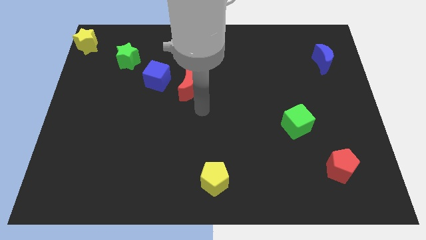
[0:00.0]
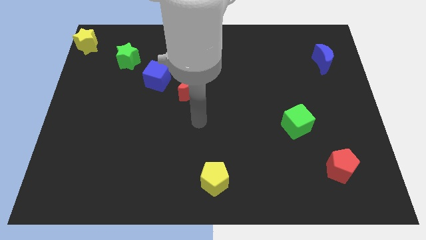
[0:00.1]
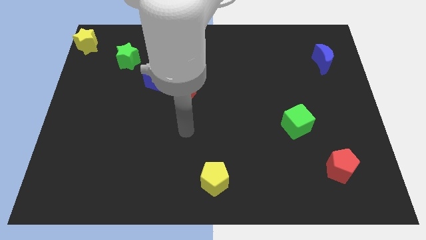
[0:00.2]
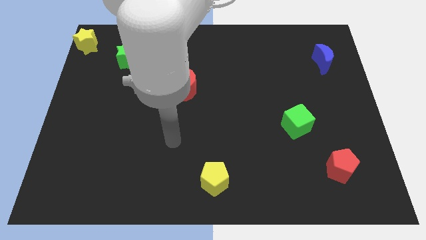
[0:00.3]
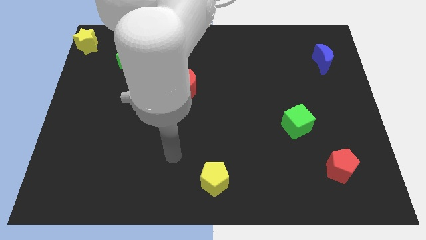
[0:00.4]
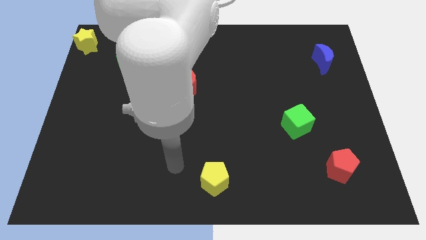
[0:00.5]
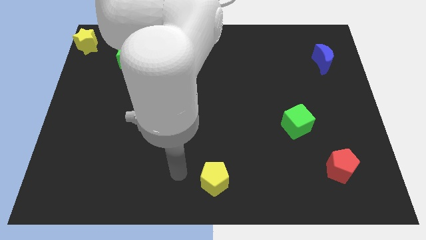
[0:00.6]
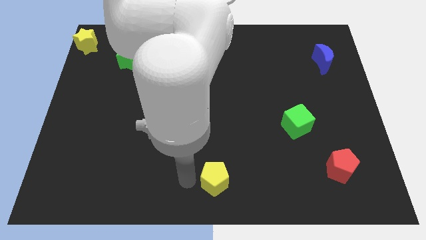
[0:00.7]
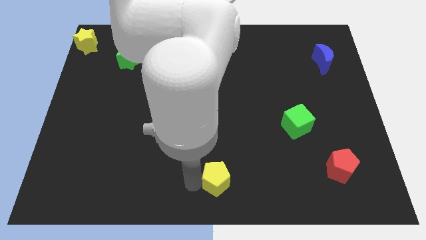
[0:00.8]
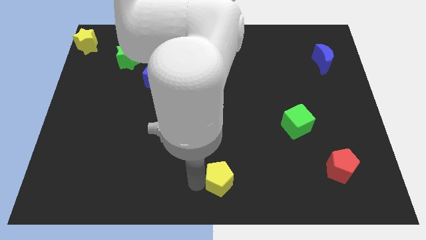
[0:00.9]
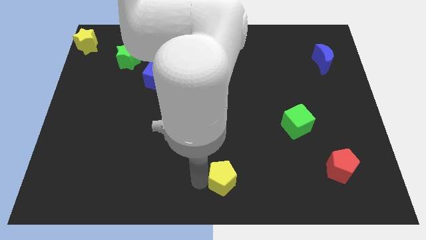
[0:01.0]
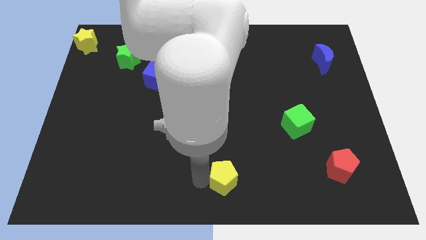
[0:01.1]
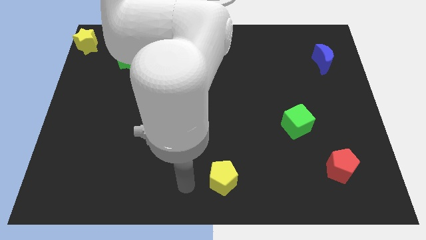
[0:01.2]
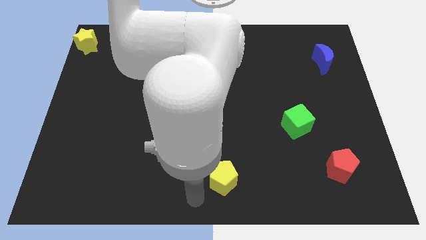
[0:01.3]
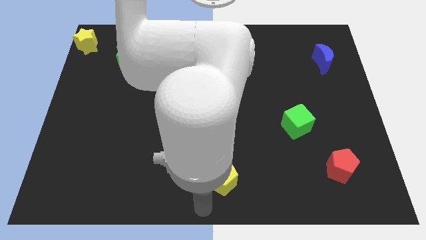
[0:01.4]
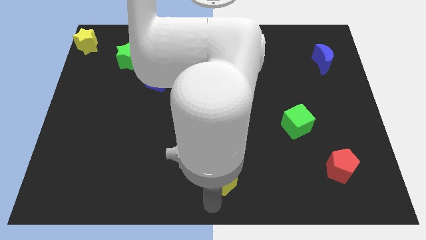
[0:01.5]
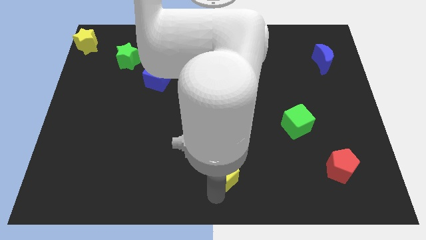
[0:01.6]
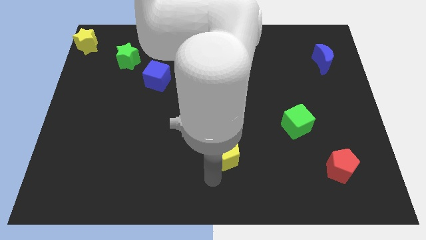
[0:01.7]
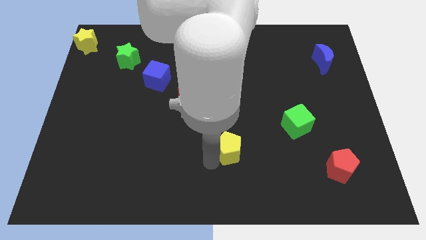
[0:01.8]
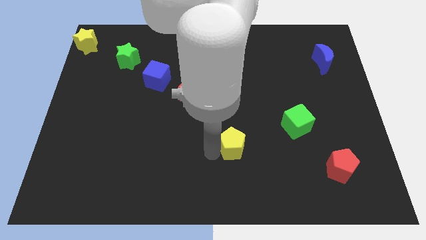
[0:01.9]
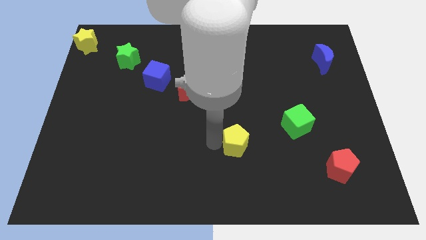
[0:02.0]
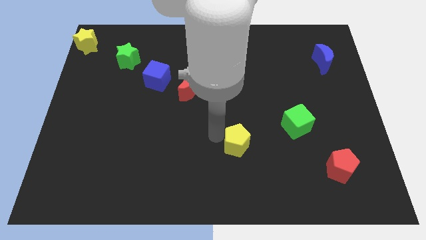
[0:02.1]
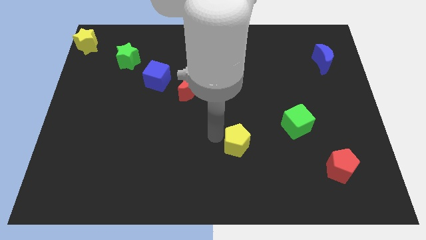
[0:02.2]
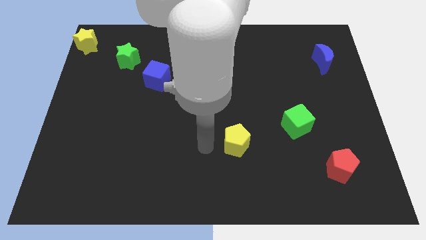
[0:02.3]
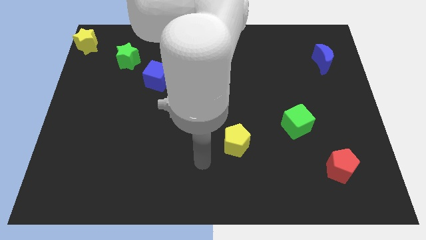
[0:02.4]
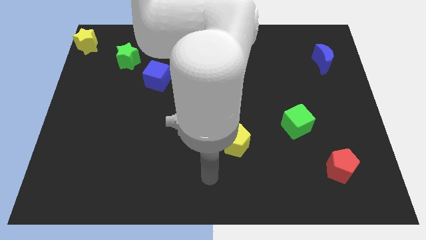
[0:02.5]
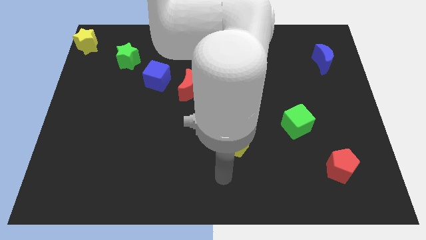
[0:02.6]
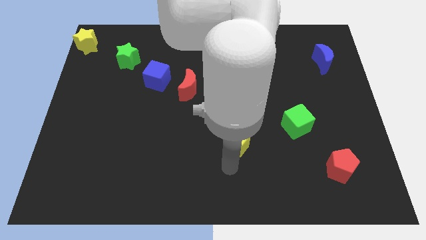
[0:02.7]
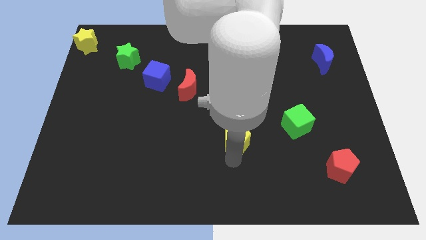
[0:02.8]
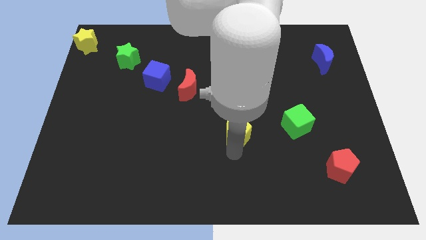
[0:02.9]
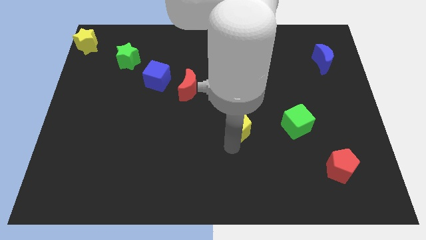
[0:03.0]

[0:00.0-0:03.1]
push yellow pentagon slightly towards up

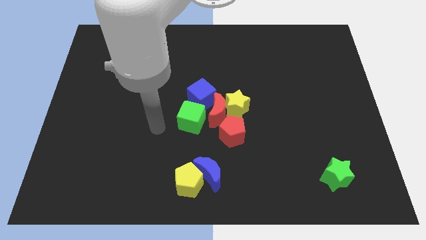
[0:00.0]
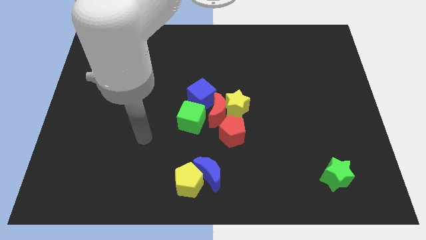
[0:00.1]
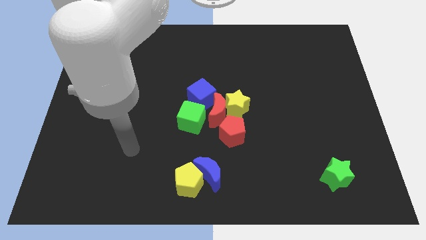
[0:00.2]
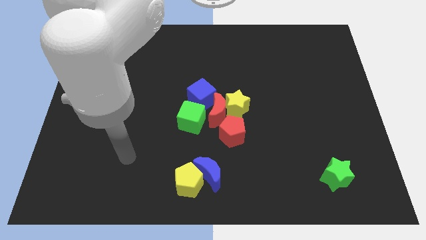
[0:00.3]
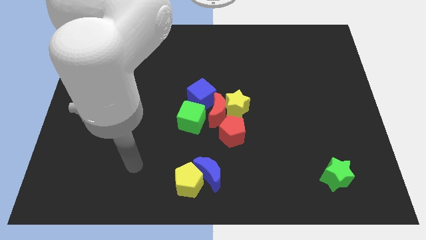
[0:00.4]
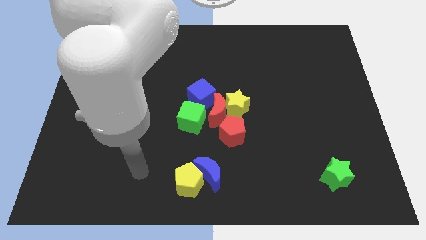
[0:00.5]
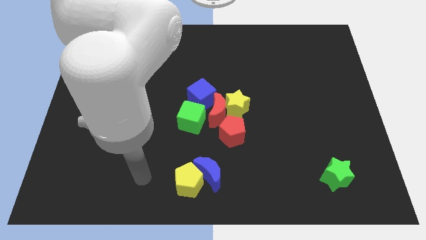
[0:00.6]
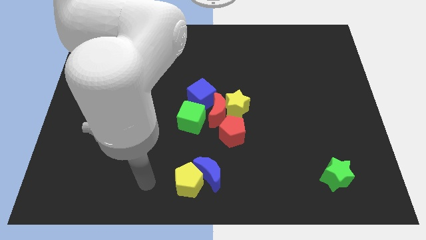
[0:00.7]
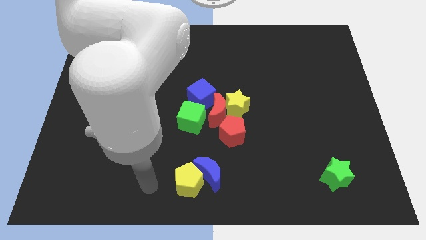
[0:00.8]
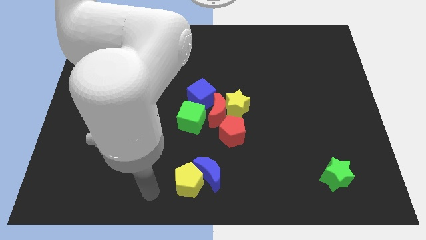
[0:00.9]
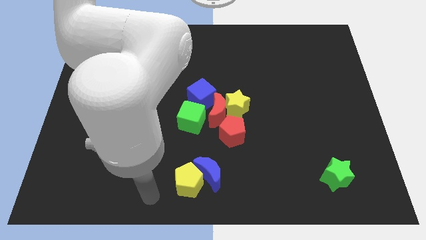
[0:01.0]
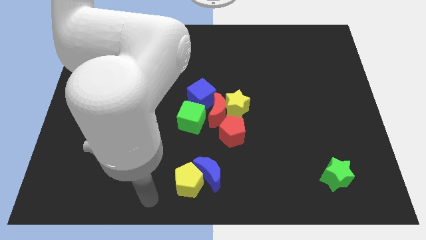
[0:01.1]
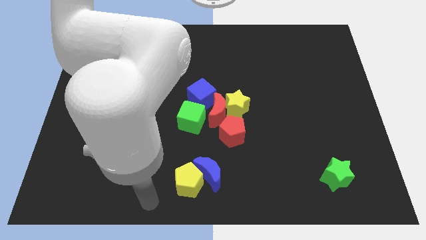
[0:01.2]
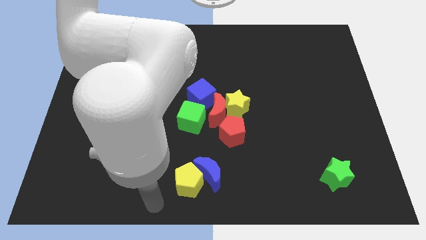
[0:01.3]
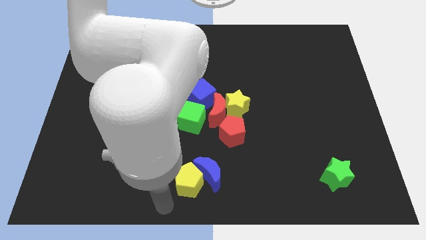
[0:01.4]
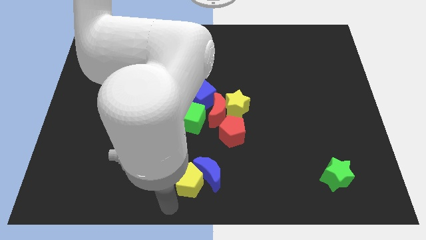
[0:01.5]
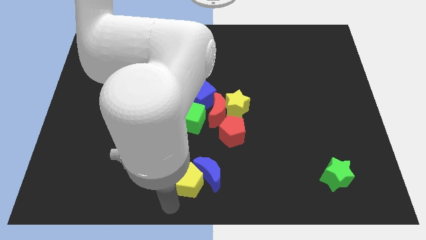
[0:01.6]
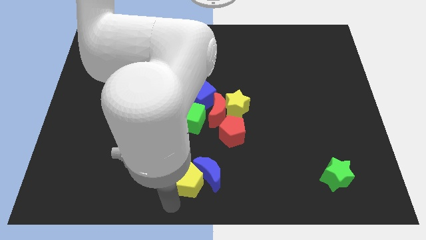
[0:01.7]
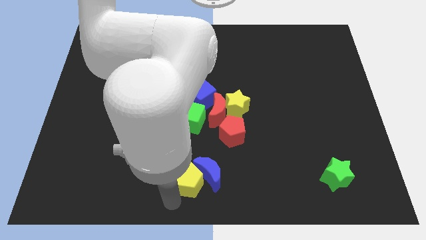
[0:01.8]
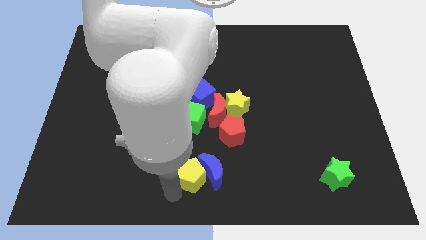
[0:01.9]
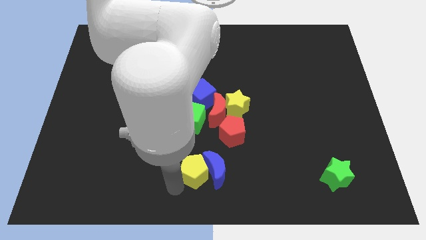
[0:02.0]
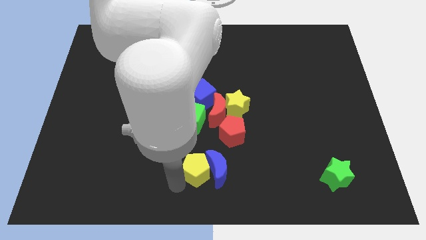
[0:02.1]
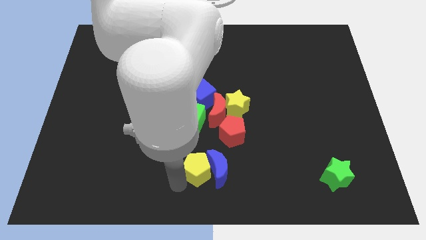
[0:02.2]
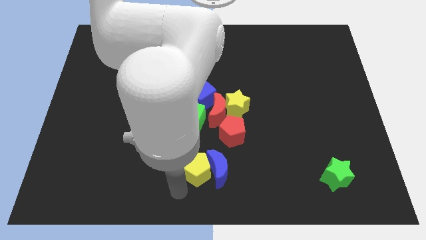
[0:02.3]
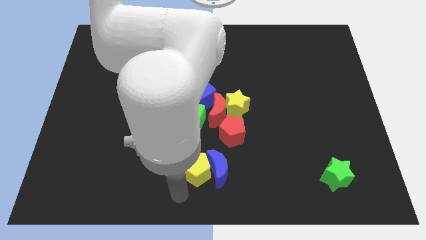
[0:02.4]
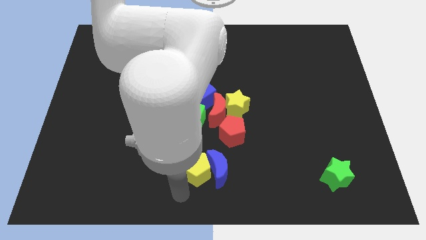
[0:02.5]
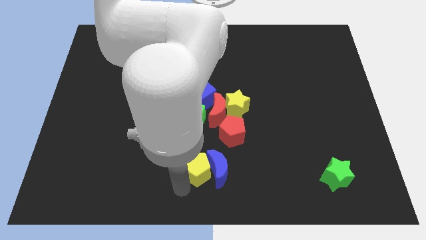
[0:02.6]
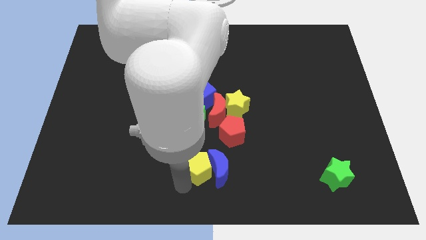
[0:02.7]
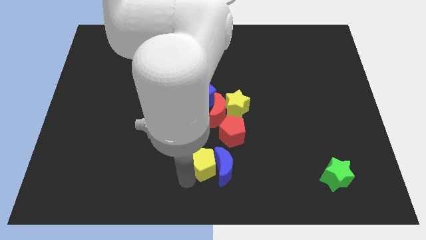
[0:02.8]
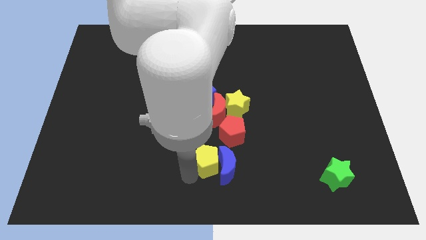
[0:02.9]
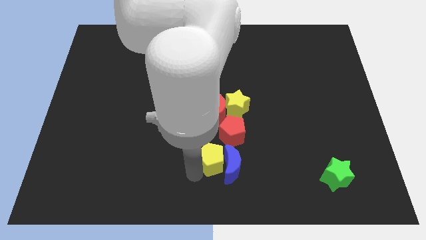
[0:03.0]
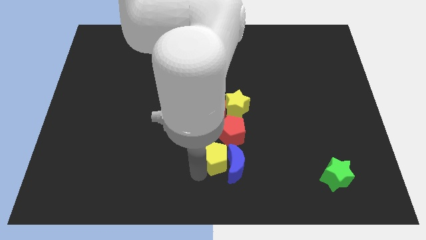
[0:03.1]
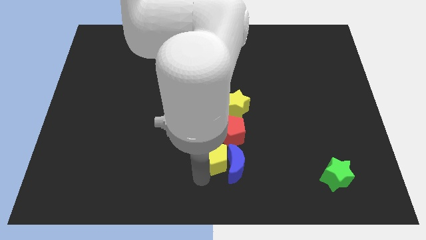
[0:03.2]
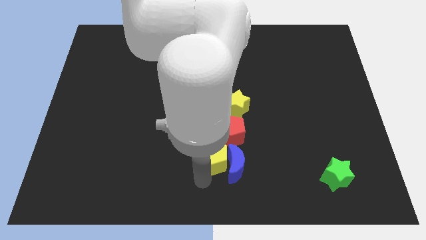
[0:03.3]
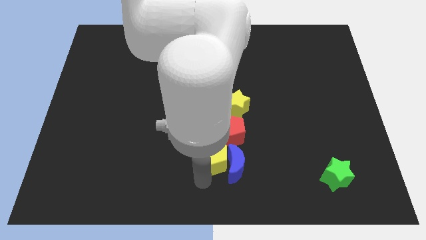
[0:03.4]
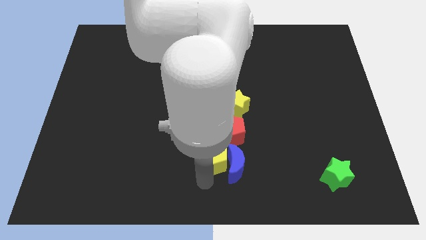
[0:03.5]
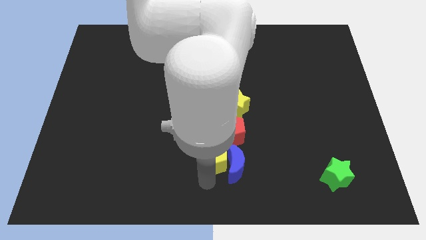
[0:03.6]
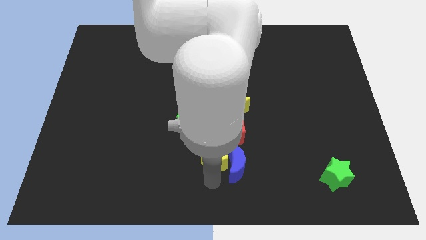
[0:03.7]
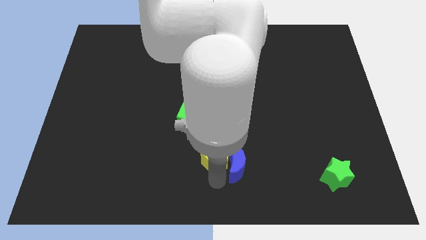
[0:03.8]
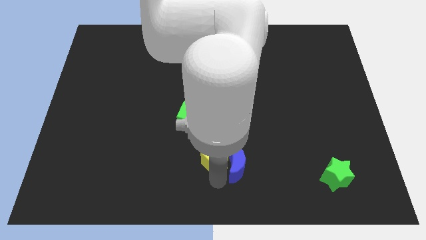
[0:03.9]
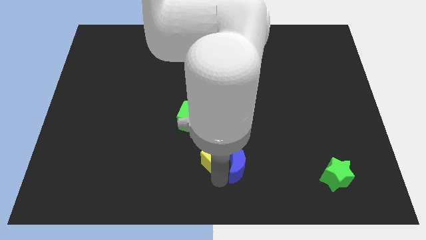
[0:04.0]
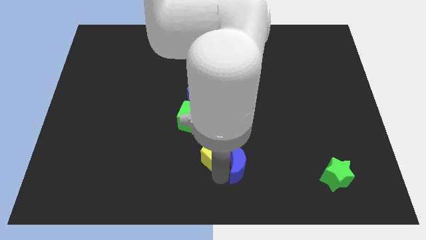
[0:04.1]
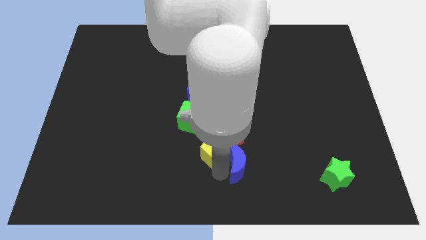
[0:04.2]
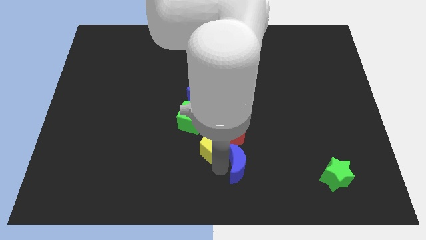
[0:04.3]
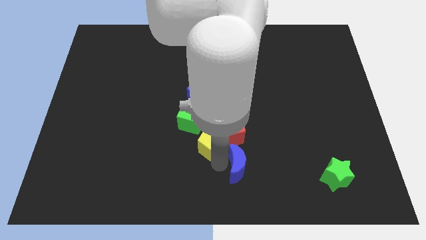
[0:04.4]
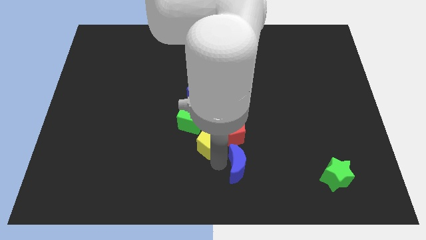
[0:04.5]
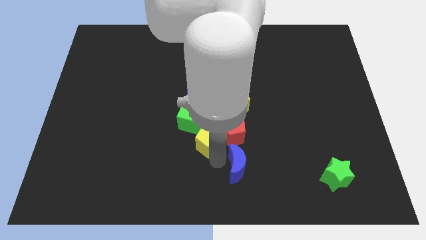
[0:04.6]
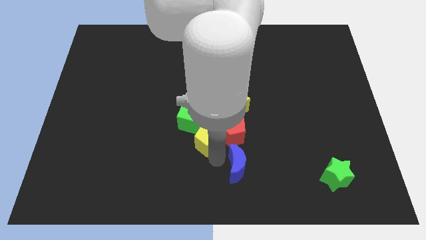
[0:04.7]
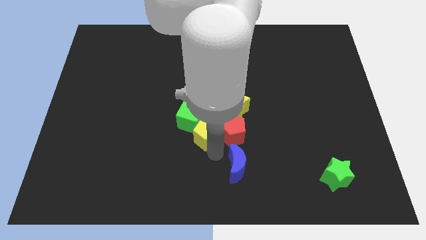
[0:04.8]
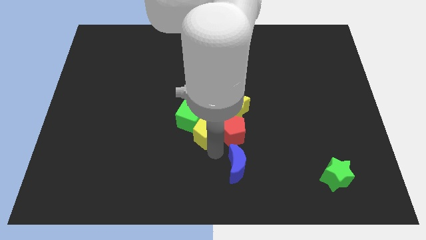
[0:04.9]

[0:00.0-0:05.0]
push the yellow pentagon to the bottom of the red crescent

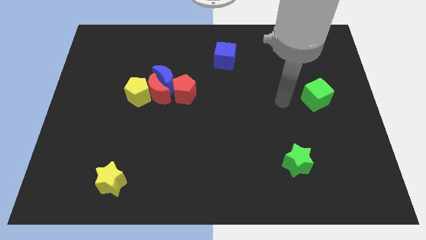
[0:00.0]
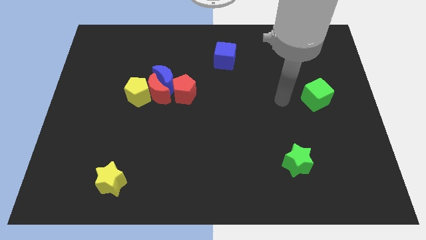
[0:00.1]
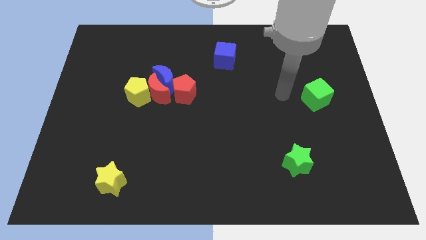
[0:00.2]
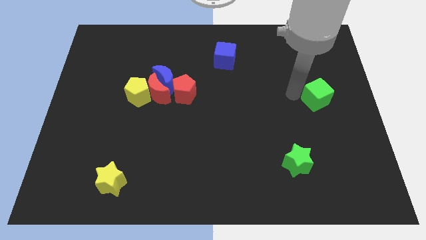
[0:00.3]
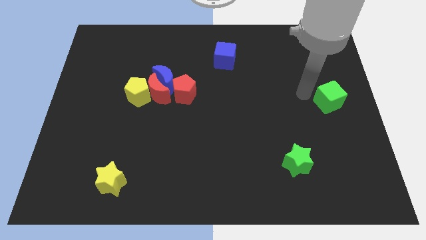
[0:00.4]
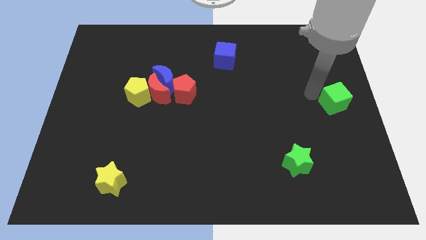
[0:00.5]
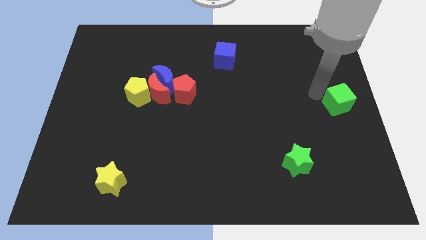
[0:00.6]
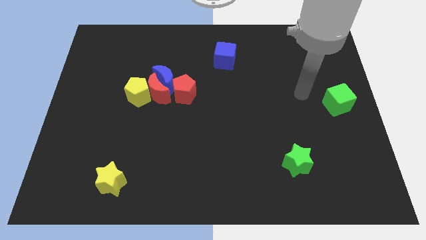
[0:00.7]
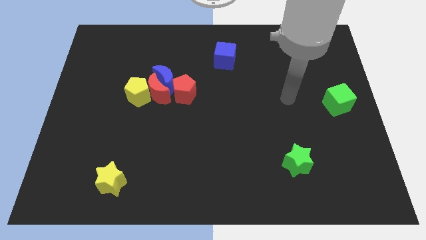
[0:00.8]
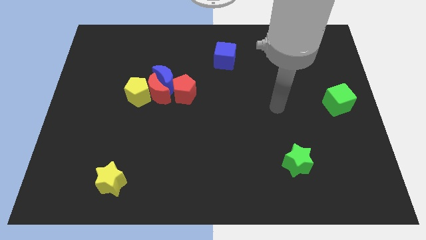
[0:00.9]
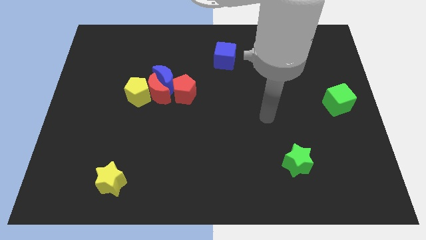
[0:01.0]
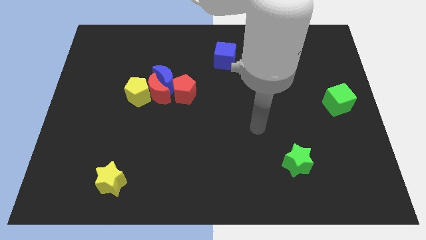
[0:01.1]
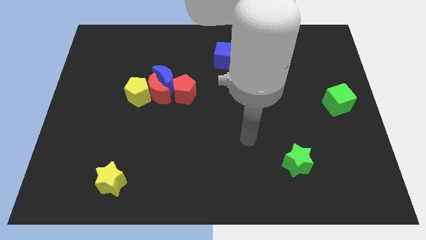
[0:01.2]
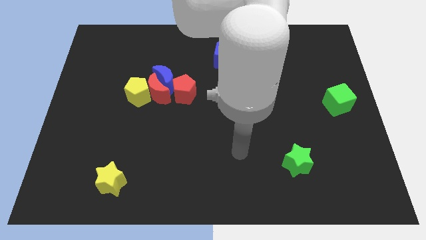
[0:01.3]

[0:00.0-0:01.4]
move the green cube slightly to the right center of the board
